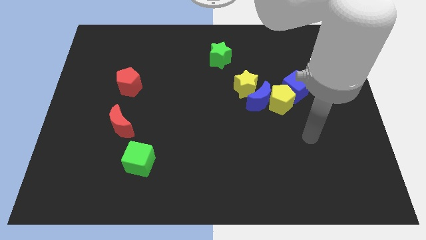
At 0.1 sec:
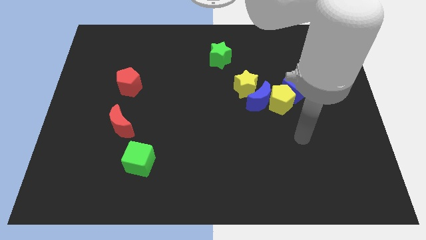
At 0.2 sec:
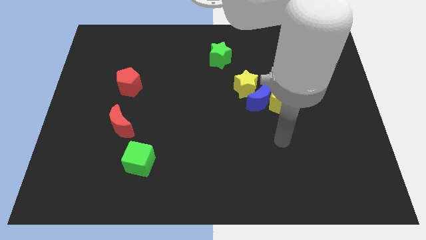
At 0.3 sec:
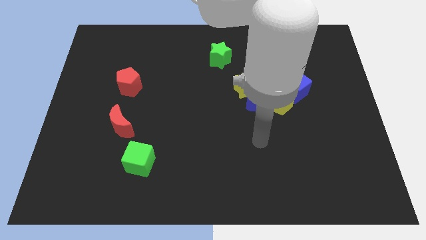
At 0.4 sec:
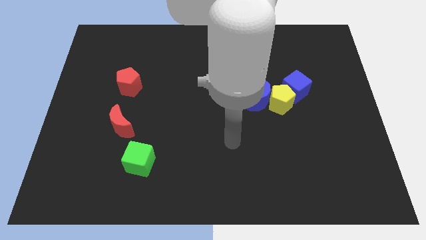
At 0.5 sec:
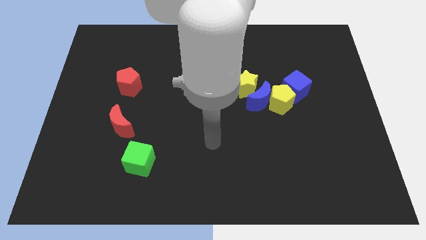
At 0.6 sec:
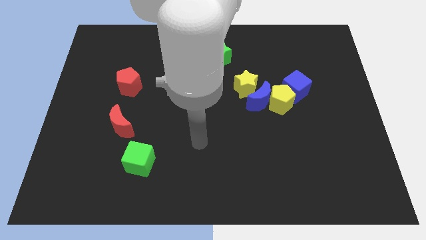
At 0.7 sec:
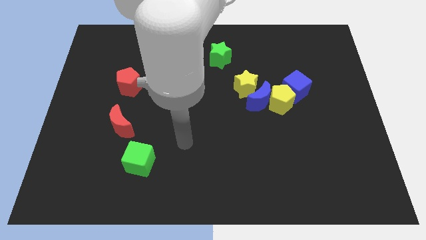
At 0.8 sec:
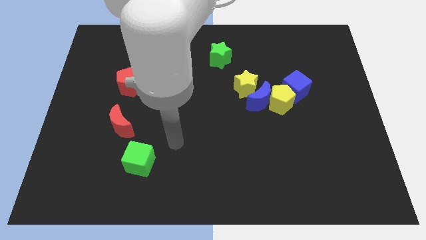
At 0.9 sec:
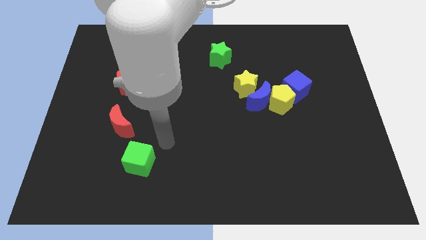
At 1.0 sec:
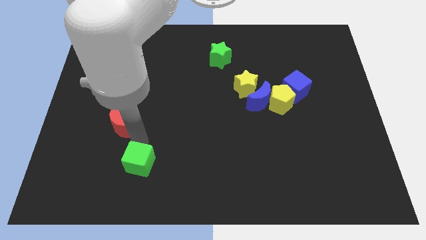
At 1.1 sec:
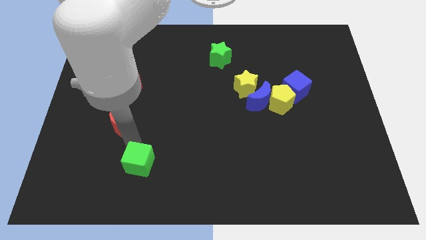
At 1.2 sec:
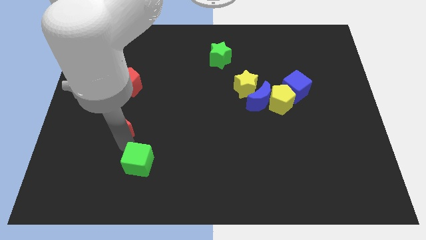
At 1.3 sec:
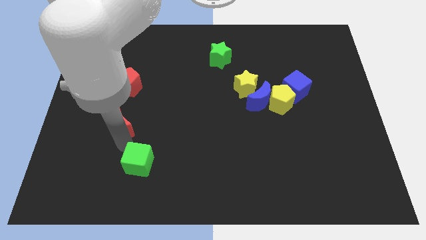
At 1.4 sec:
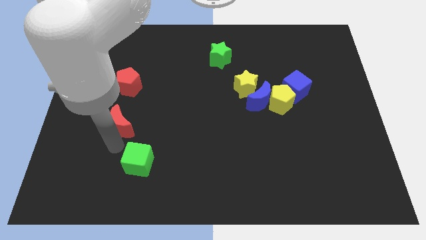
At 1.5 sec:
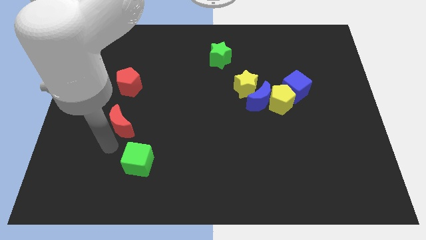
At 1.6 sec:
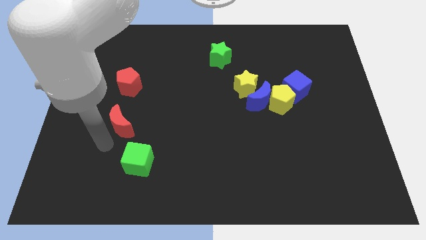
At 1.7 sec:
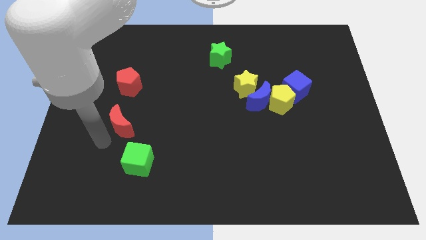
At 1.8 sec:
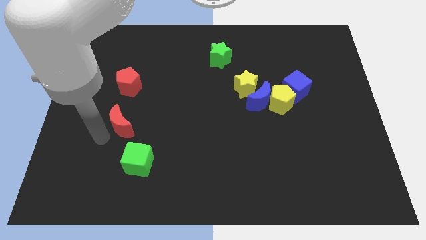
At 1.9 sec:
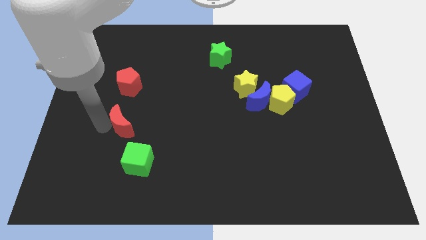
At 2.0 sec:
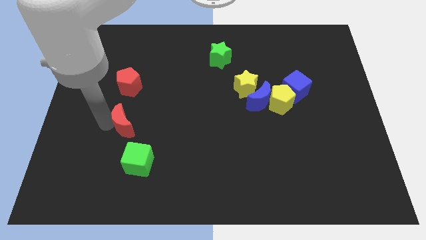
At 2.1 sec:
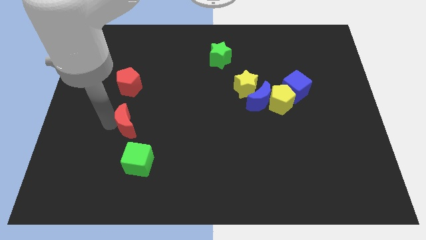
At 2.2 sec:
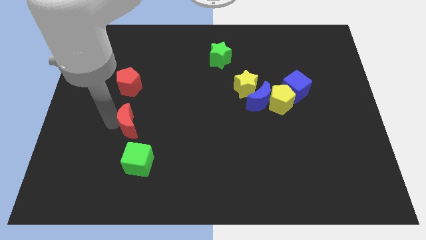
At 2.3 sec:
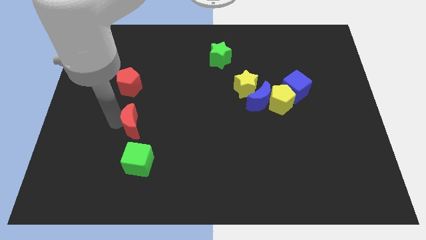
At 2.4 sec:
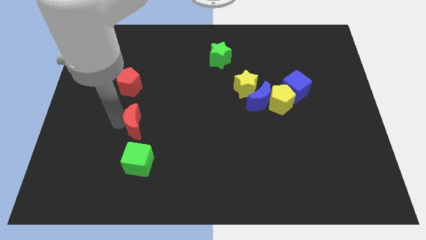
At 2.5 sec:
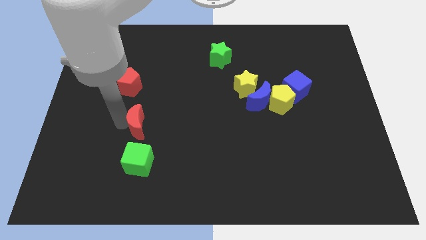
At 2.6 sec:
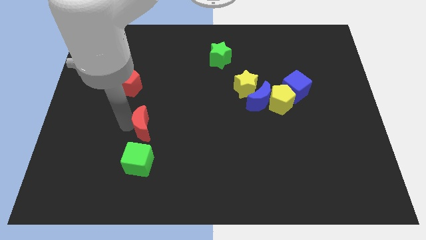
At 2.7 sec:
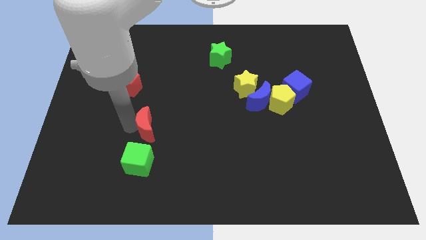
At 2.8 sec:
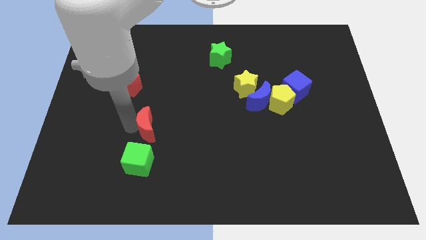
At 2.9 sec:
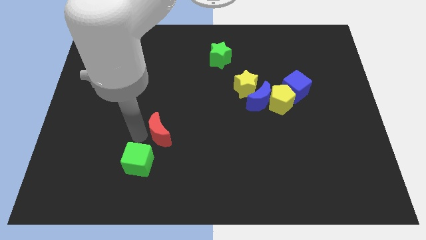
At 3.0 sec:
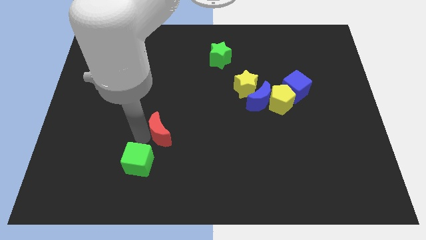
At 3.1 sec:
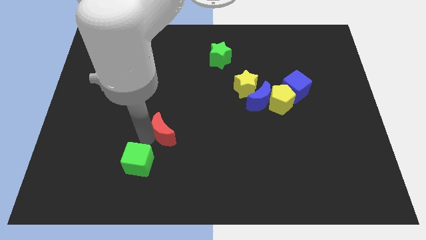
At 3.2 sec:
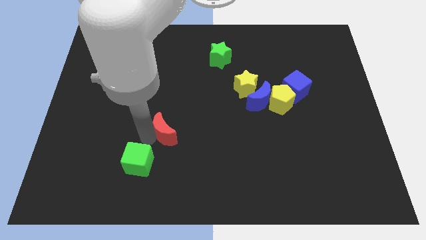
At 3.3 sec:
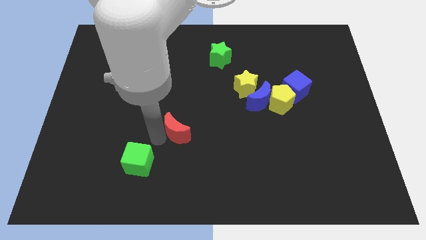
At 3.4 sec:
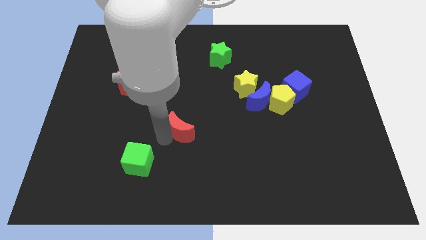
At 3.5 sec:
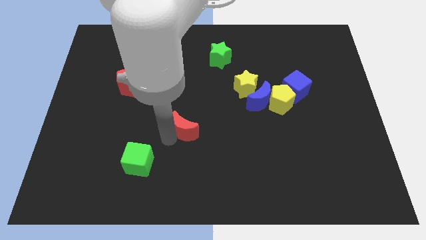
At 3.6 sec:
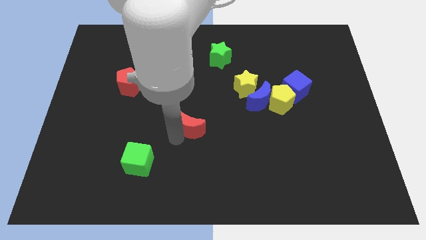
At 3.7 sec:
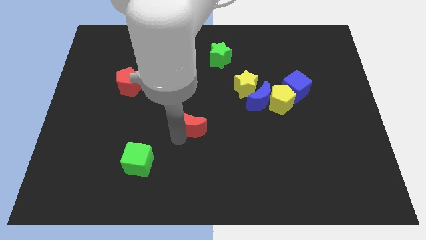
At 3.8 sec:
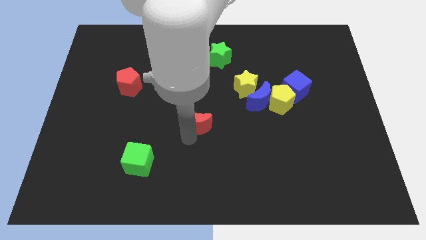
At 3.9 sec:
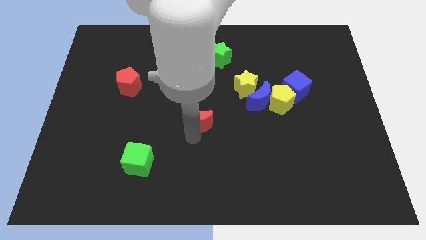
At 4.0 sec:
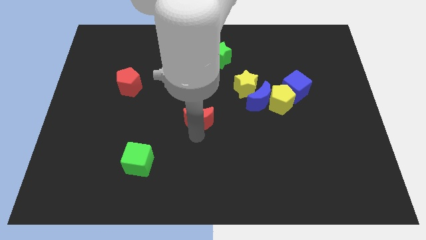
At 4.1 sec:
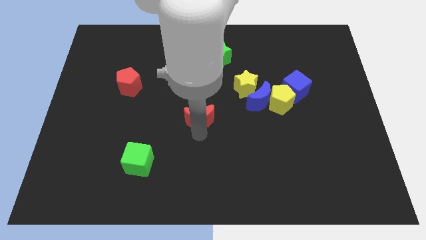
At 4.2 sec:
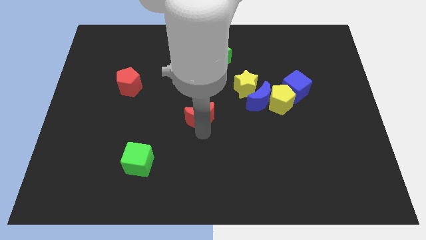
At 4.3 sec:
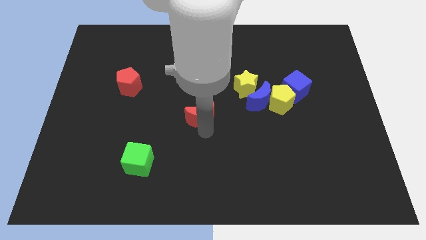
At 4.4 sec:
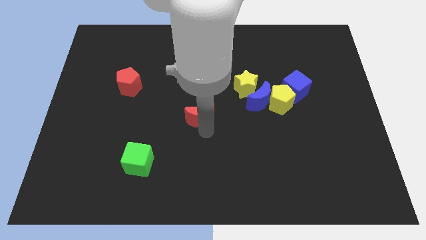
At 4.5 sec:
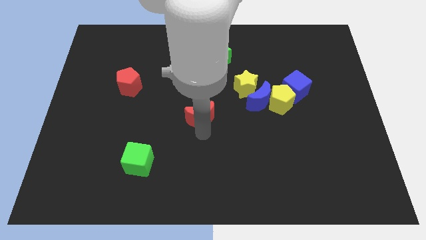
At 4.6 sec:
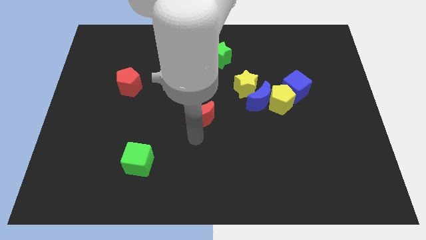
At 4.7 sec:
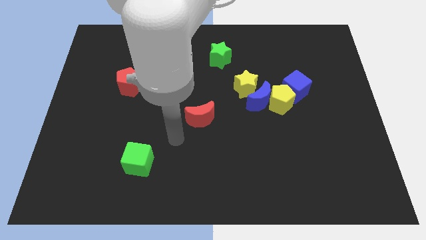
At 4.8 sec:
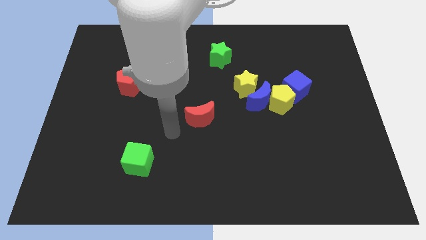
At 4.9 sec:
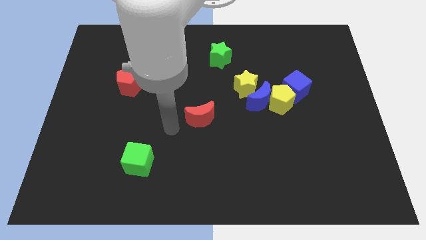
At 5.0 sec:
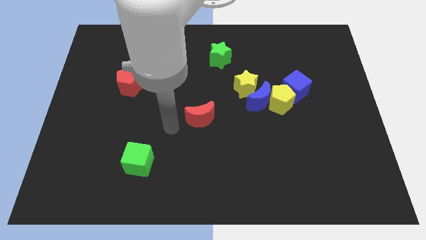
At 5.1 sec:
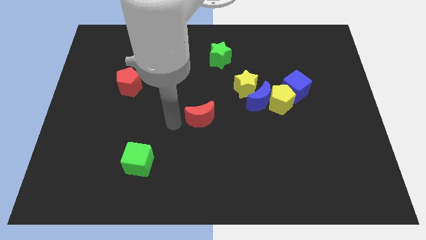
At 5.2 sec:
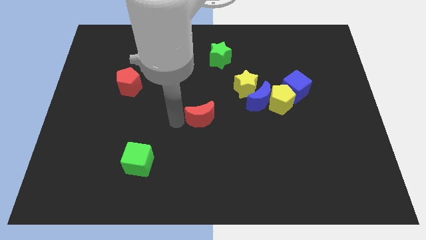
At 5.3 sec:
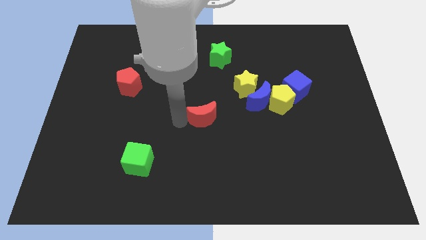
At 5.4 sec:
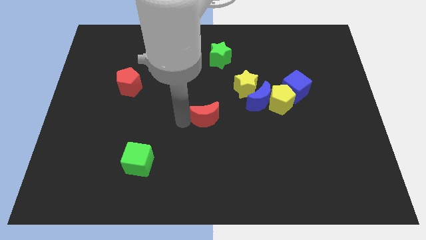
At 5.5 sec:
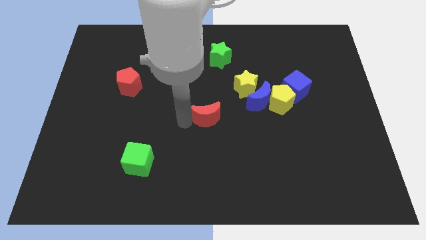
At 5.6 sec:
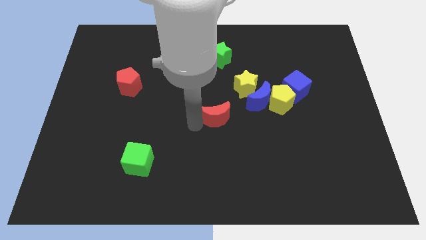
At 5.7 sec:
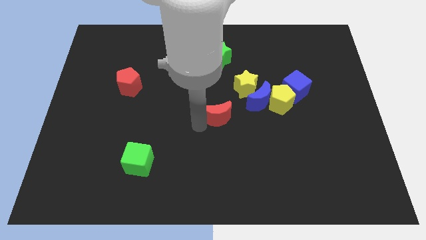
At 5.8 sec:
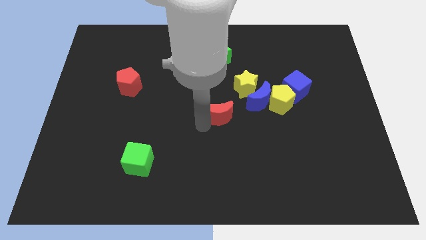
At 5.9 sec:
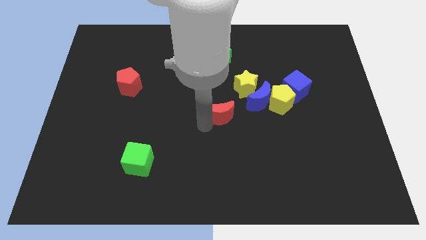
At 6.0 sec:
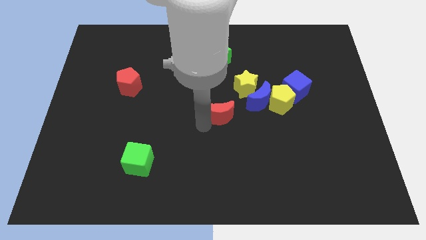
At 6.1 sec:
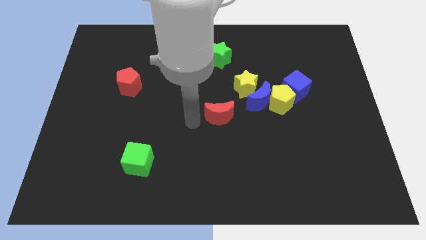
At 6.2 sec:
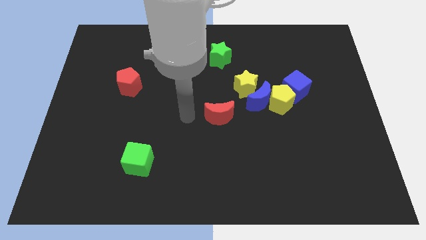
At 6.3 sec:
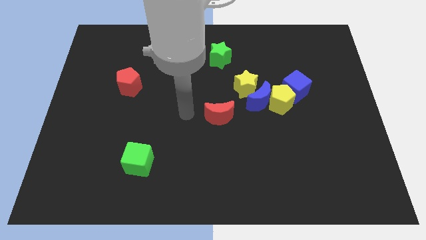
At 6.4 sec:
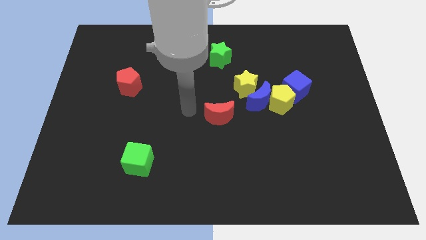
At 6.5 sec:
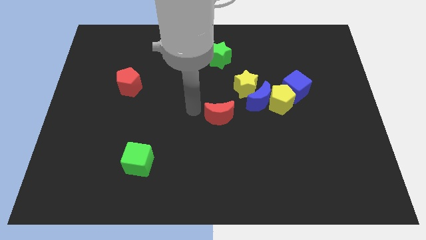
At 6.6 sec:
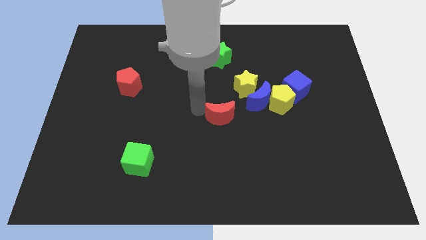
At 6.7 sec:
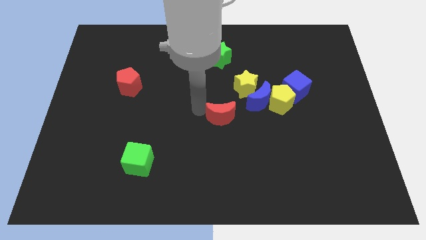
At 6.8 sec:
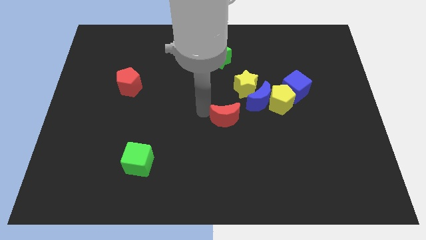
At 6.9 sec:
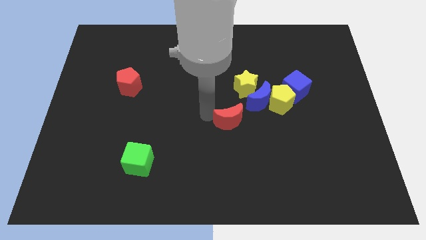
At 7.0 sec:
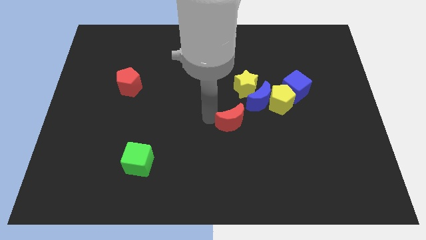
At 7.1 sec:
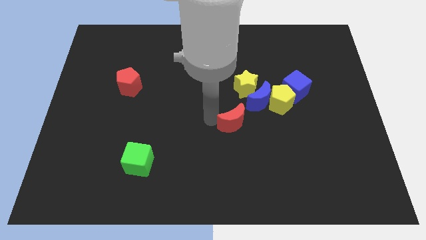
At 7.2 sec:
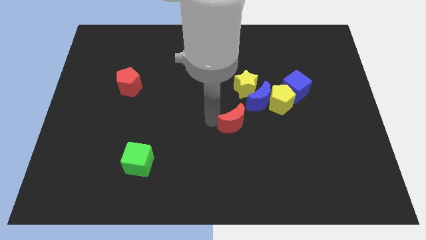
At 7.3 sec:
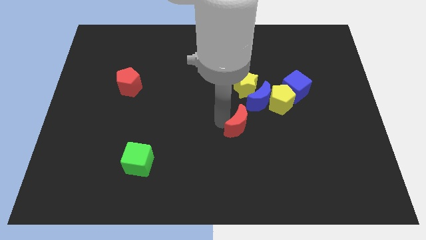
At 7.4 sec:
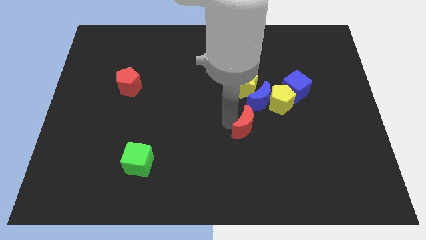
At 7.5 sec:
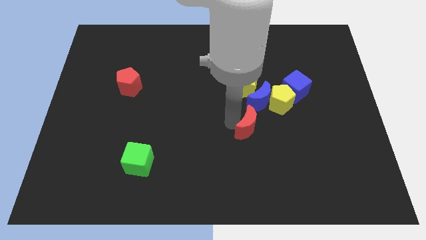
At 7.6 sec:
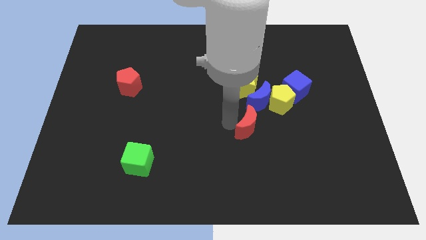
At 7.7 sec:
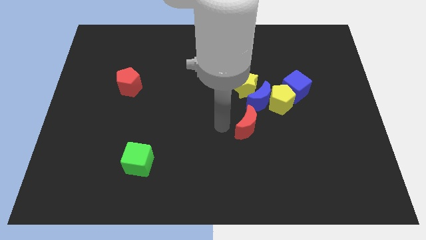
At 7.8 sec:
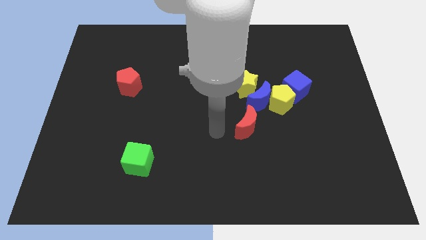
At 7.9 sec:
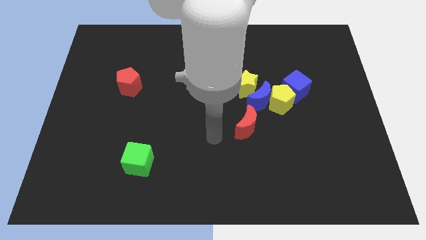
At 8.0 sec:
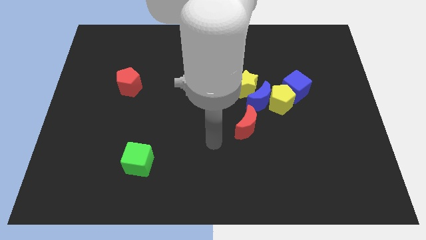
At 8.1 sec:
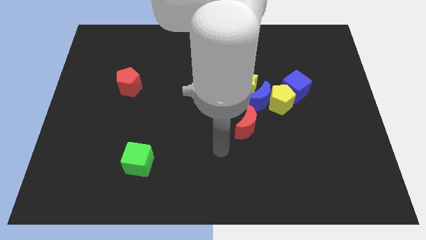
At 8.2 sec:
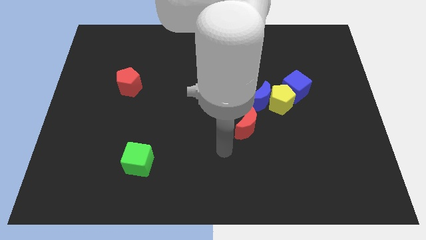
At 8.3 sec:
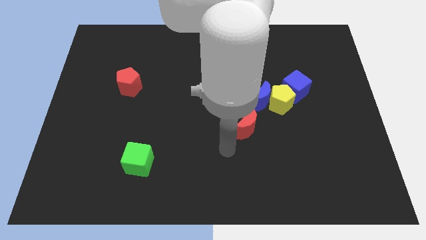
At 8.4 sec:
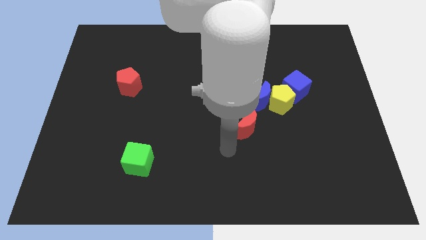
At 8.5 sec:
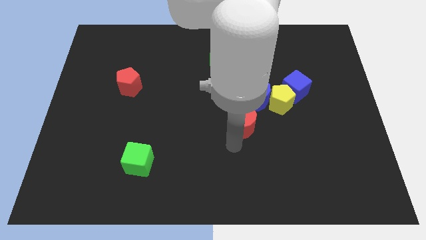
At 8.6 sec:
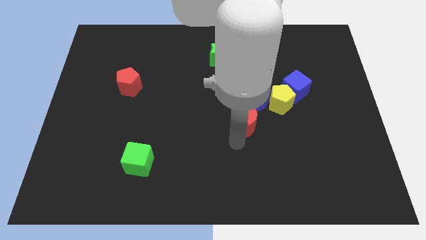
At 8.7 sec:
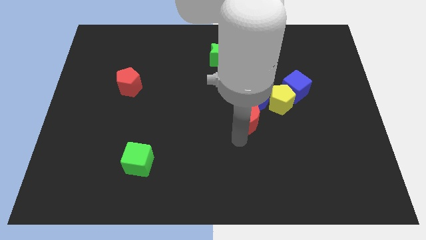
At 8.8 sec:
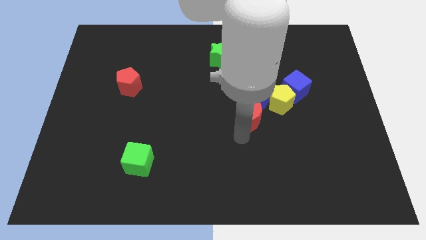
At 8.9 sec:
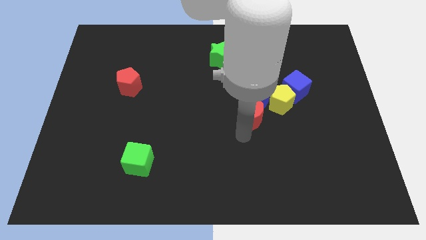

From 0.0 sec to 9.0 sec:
slide the red moon to the blue moon
